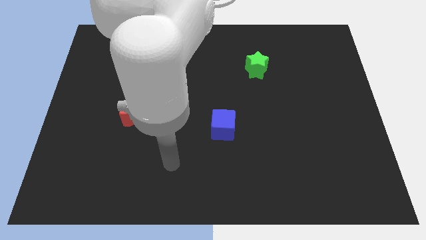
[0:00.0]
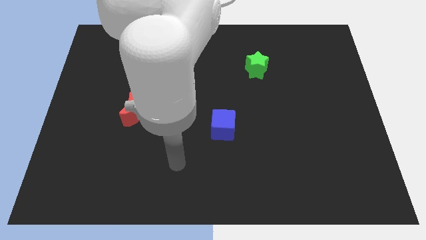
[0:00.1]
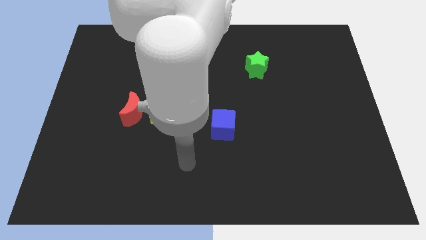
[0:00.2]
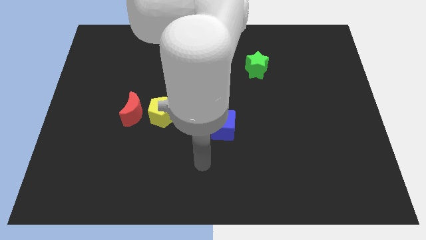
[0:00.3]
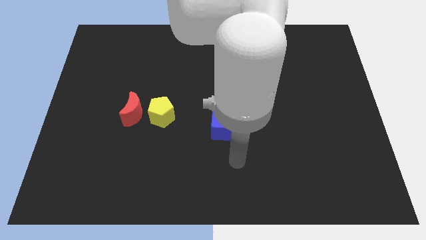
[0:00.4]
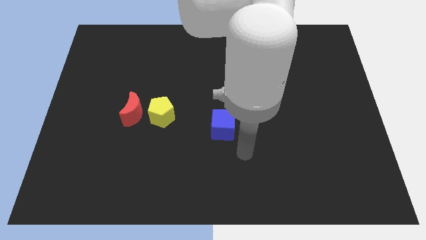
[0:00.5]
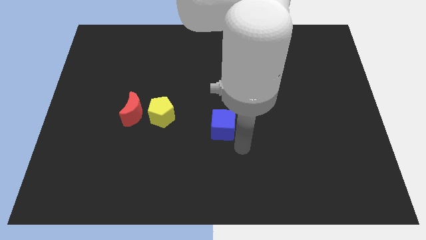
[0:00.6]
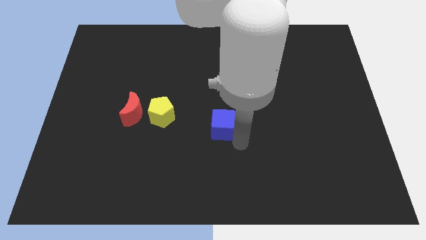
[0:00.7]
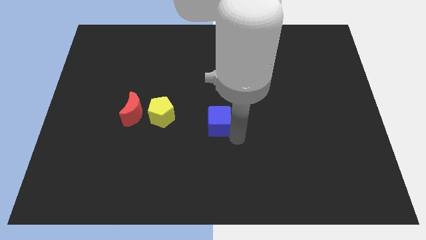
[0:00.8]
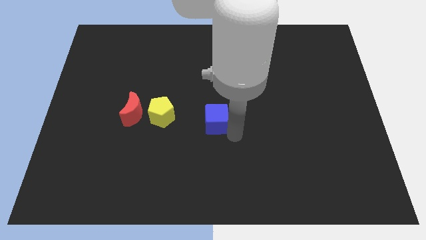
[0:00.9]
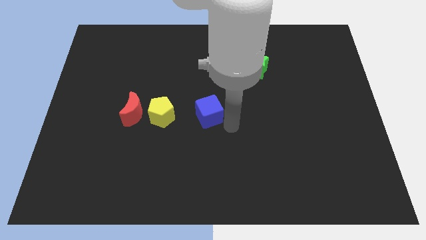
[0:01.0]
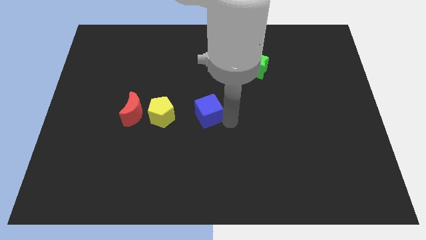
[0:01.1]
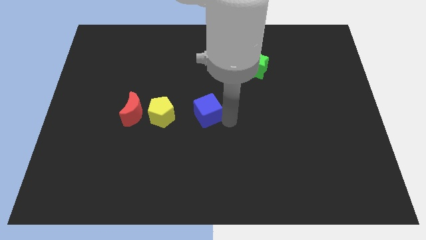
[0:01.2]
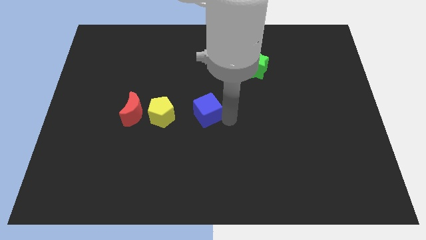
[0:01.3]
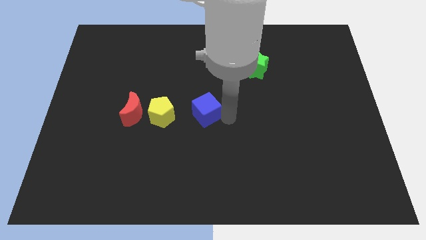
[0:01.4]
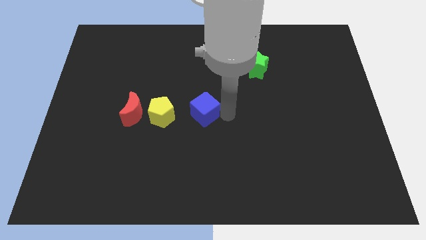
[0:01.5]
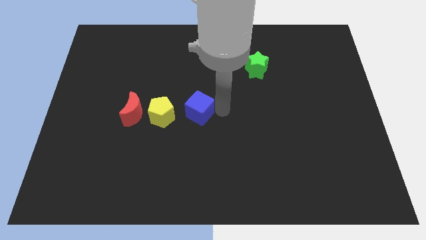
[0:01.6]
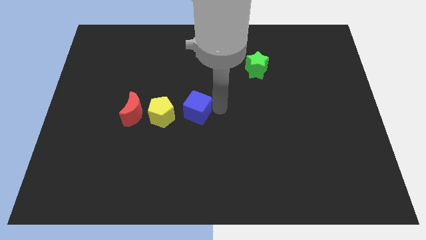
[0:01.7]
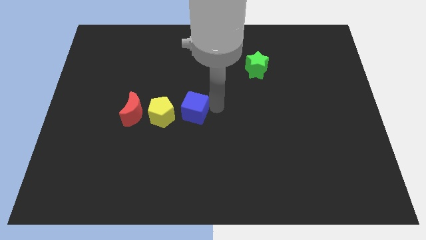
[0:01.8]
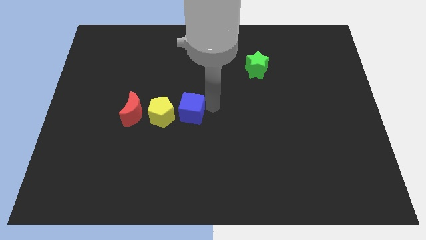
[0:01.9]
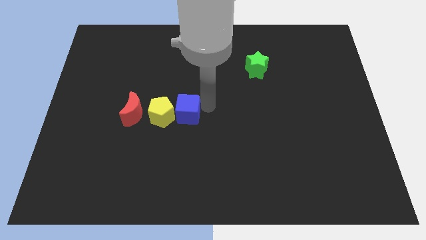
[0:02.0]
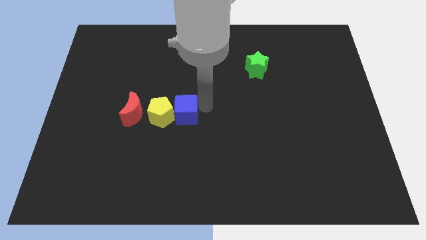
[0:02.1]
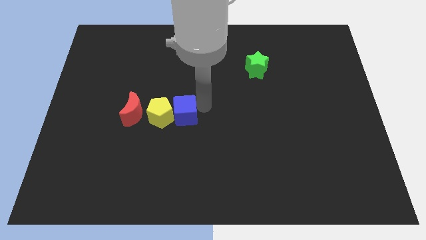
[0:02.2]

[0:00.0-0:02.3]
push the blue block close to the yellow pentagon

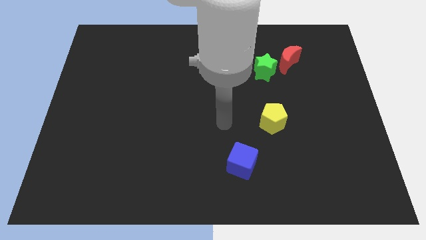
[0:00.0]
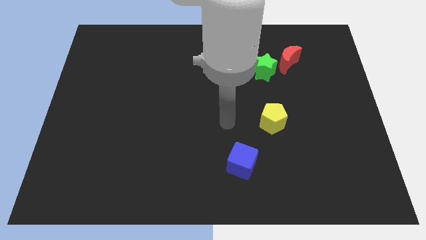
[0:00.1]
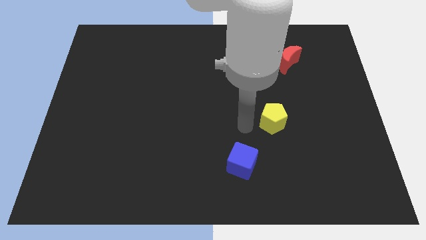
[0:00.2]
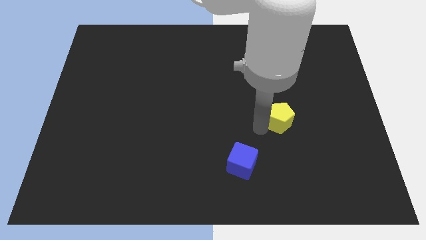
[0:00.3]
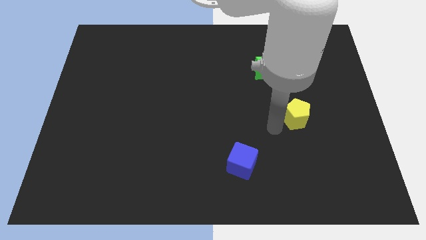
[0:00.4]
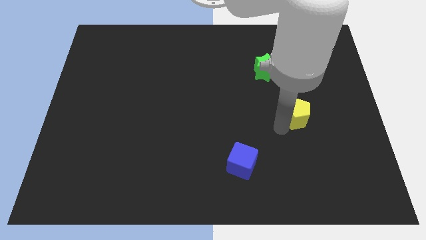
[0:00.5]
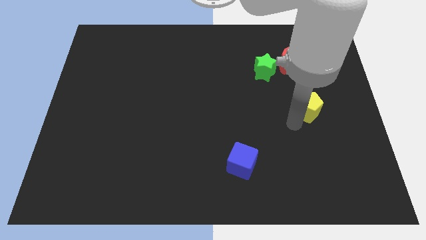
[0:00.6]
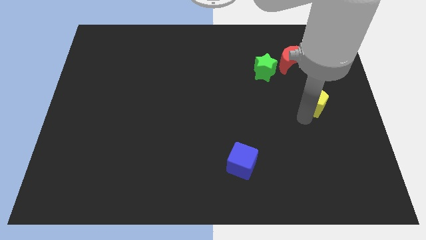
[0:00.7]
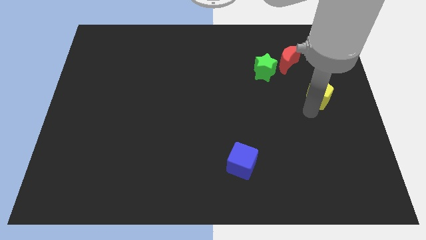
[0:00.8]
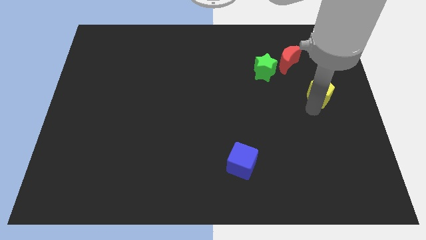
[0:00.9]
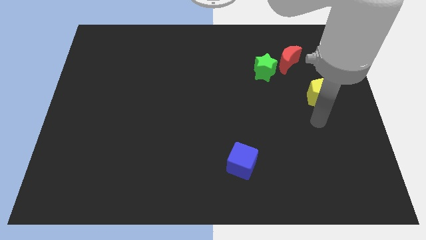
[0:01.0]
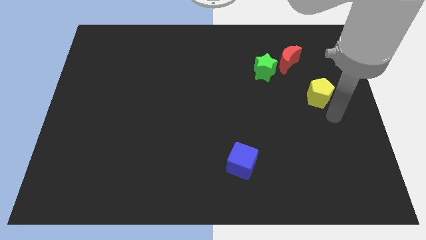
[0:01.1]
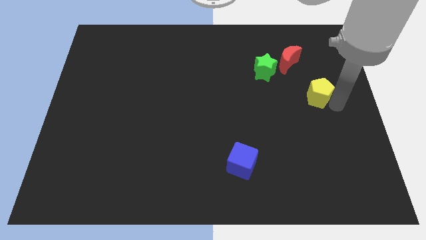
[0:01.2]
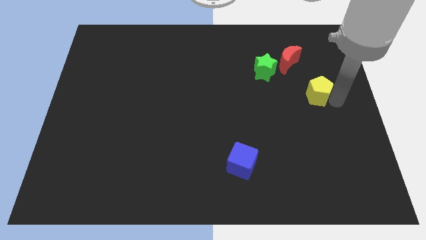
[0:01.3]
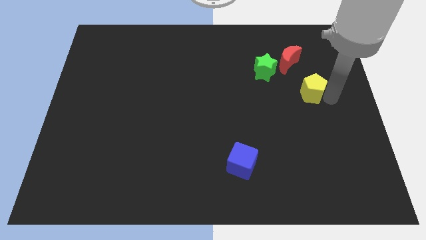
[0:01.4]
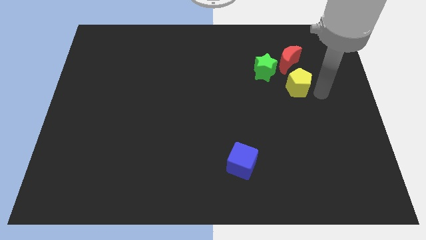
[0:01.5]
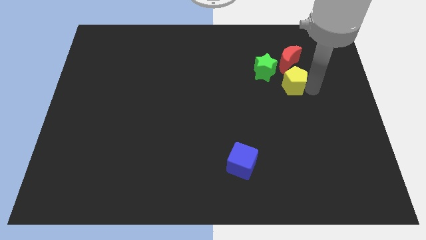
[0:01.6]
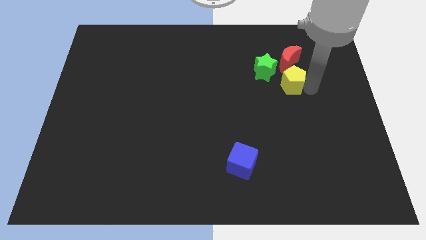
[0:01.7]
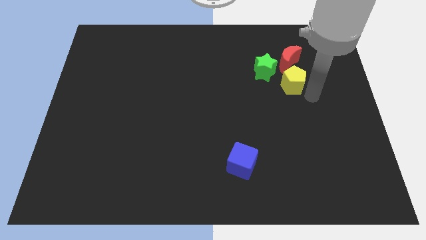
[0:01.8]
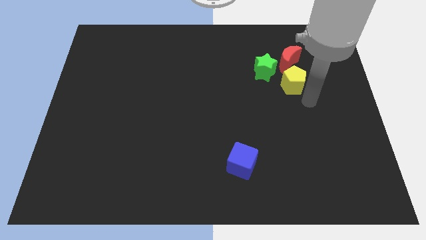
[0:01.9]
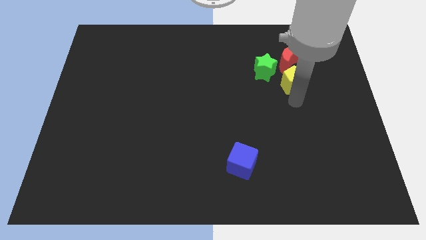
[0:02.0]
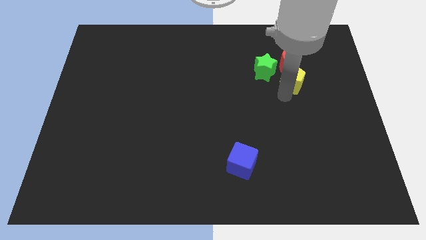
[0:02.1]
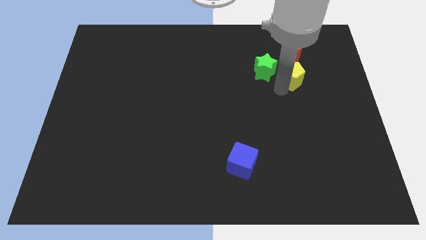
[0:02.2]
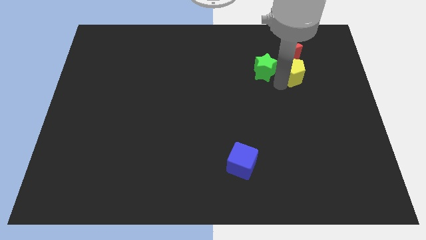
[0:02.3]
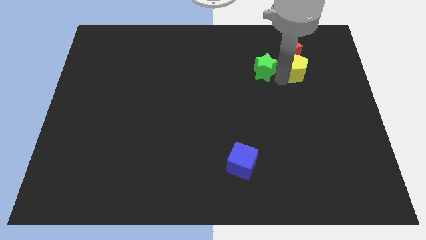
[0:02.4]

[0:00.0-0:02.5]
put the pentagon next to the moon

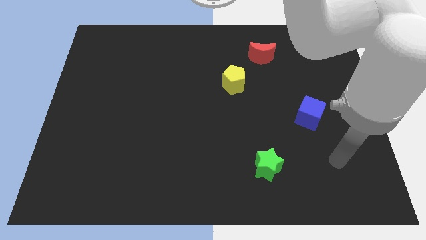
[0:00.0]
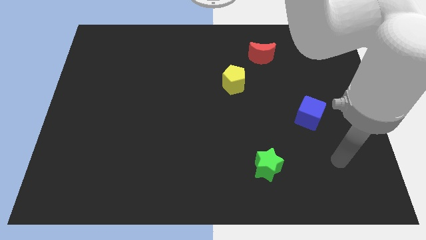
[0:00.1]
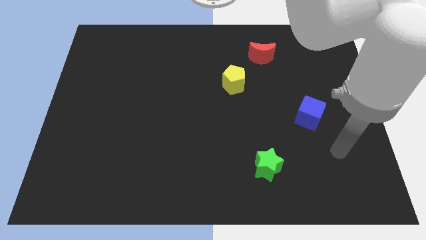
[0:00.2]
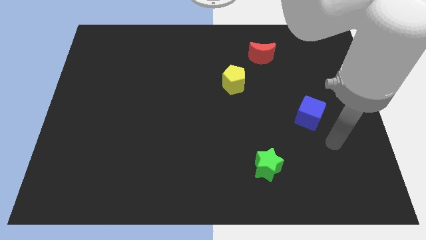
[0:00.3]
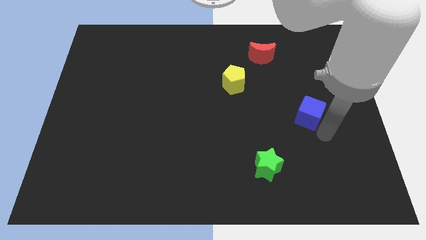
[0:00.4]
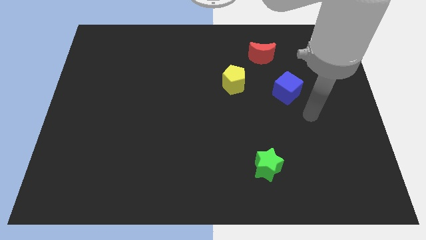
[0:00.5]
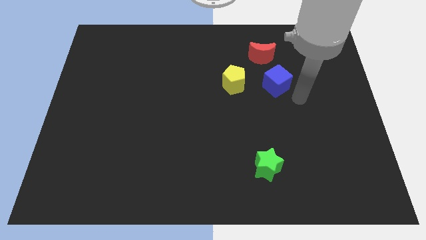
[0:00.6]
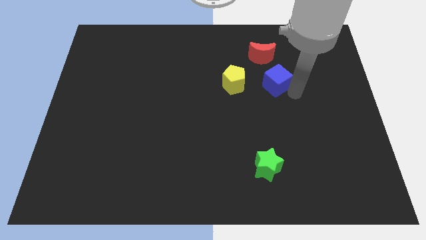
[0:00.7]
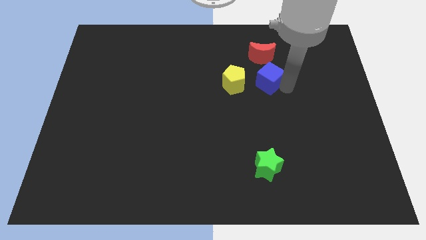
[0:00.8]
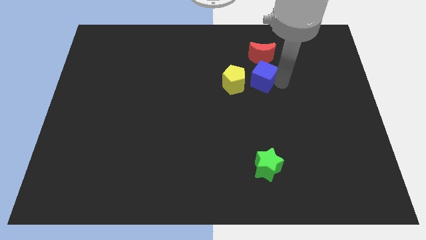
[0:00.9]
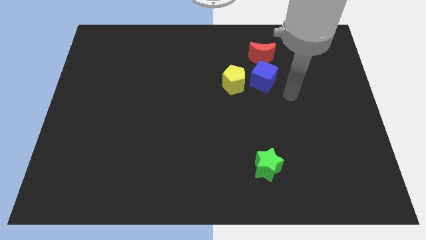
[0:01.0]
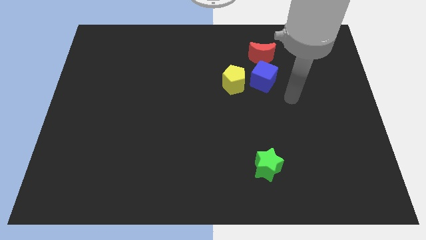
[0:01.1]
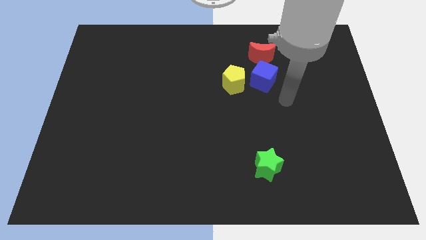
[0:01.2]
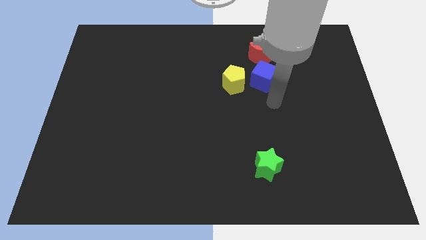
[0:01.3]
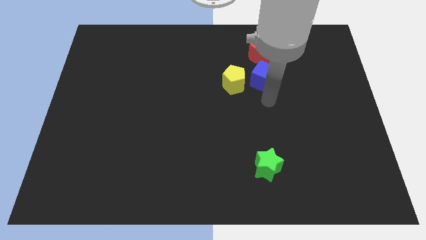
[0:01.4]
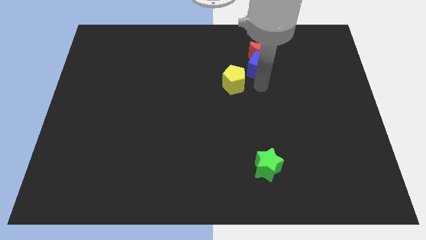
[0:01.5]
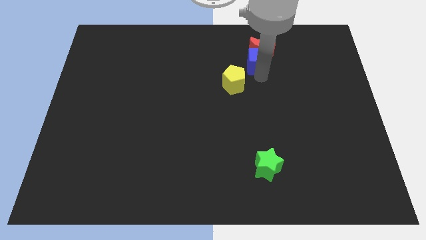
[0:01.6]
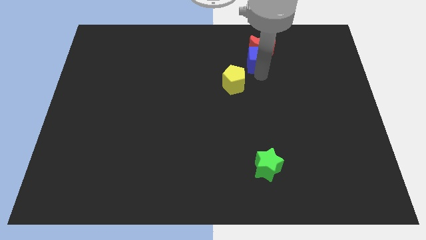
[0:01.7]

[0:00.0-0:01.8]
push the blue cube next to the moon

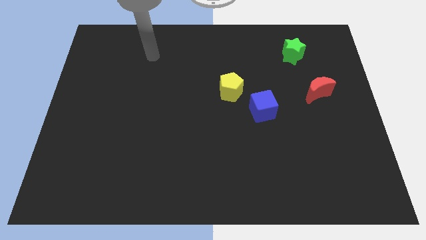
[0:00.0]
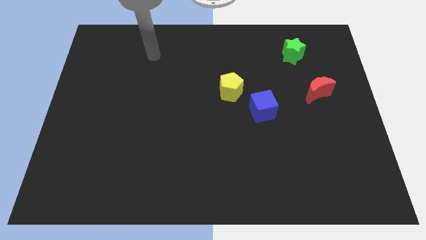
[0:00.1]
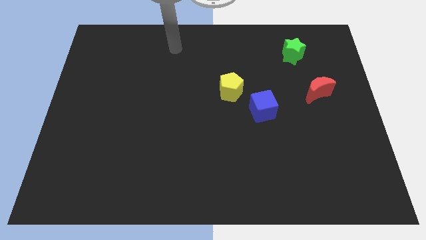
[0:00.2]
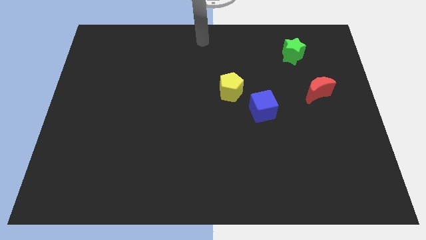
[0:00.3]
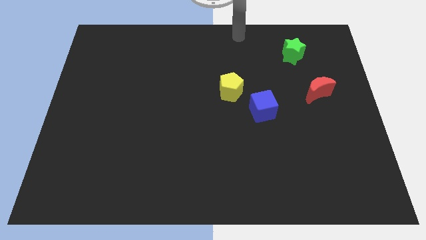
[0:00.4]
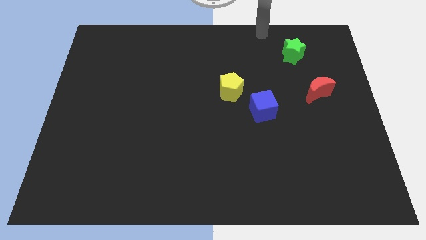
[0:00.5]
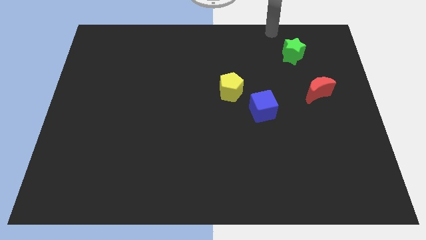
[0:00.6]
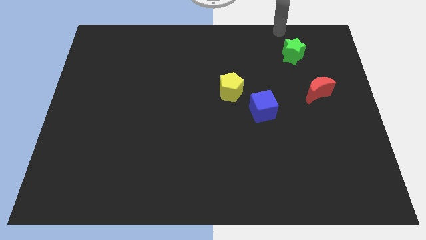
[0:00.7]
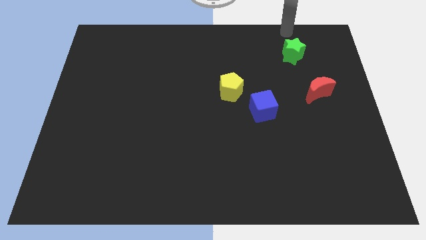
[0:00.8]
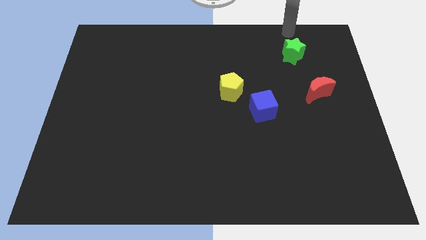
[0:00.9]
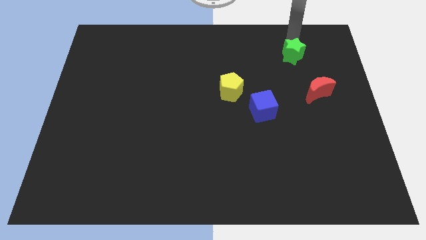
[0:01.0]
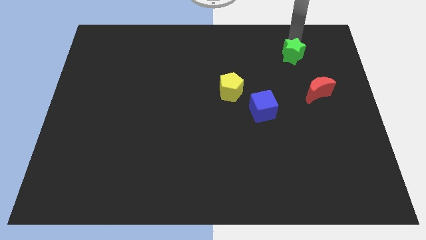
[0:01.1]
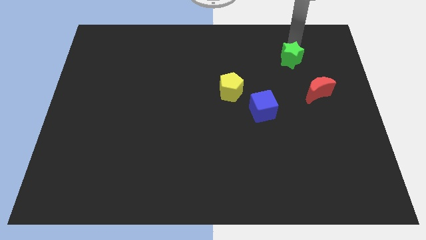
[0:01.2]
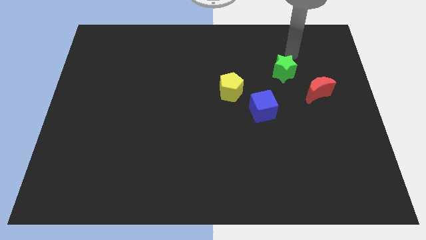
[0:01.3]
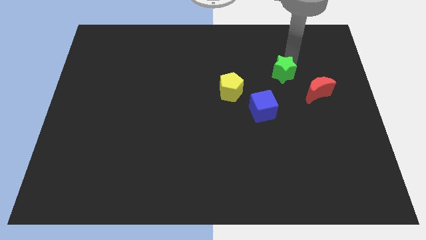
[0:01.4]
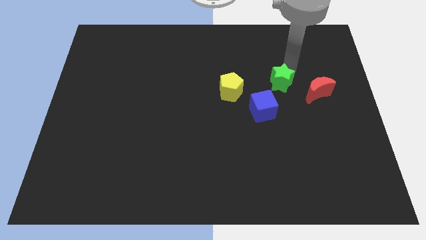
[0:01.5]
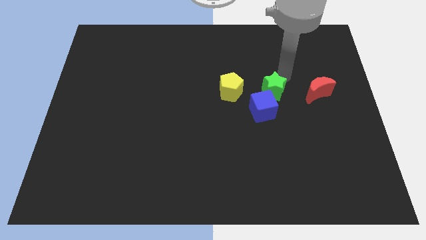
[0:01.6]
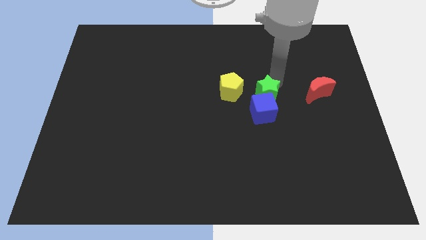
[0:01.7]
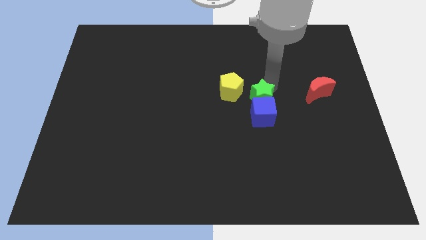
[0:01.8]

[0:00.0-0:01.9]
put the green star to the blue block

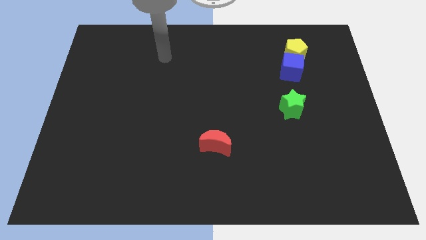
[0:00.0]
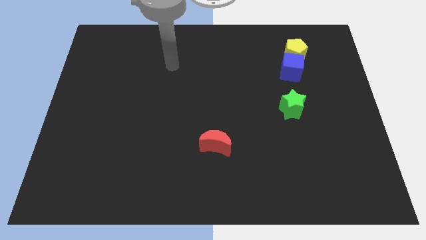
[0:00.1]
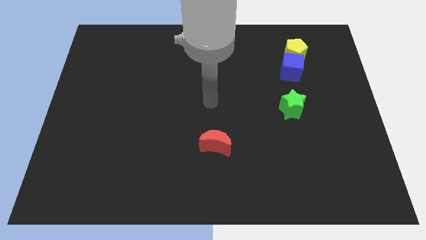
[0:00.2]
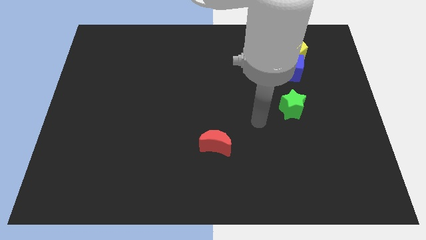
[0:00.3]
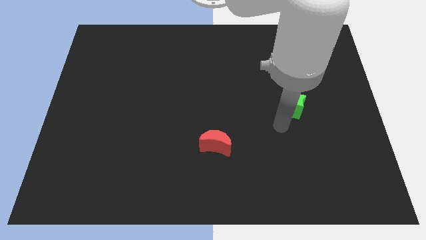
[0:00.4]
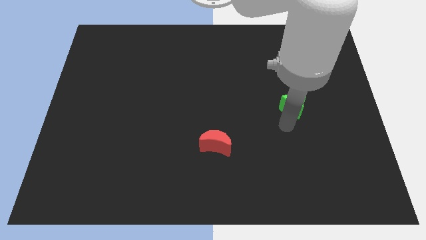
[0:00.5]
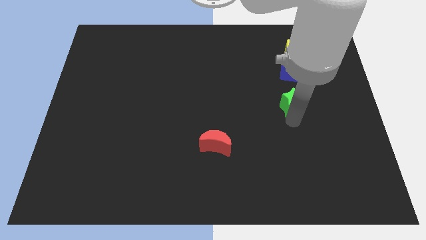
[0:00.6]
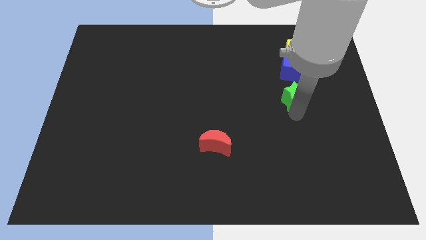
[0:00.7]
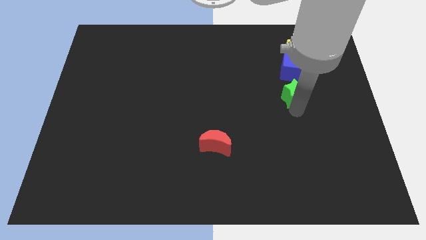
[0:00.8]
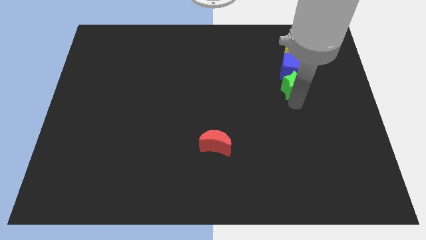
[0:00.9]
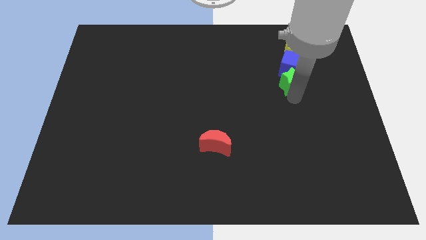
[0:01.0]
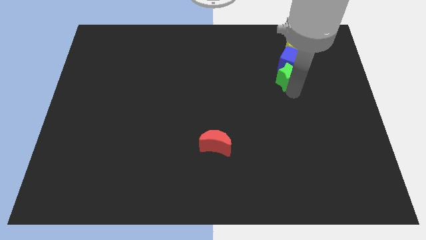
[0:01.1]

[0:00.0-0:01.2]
slide the green star close to the blue block
